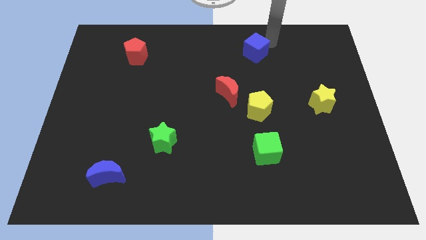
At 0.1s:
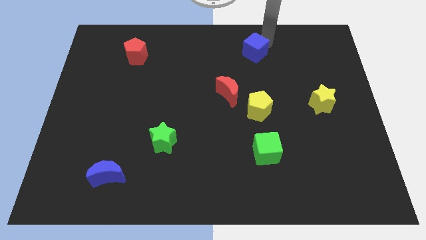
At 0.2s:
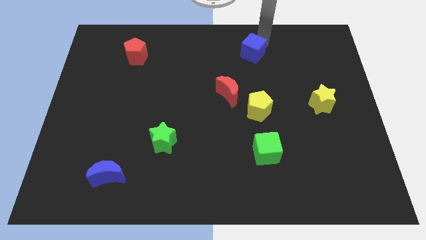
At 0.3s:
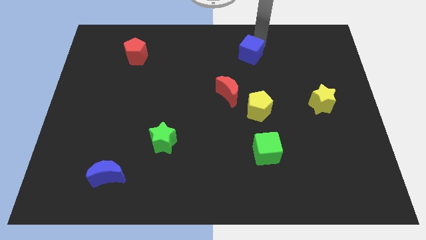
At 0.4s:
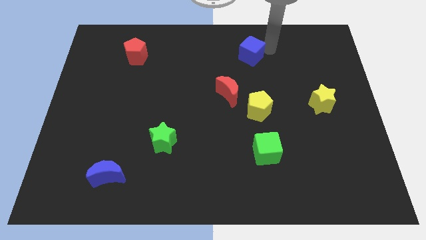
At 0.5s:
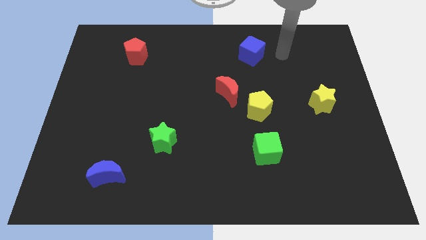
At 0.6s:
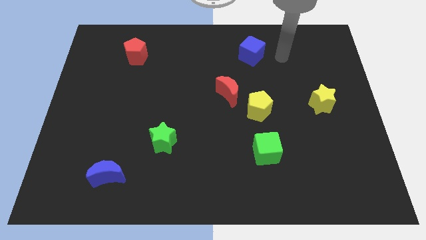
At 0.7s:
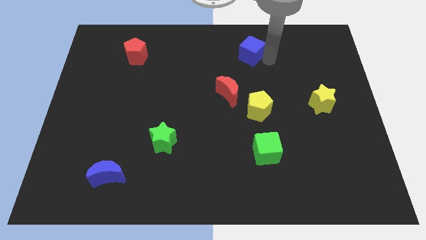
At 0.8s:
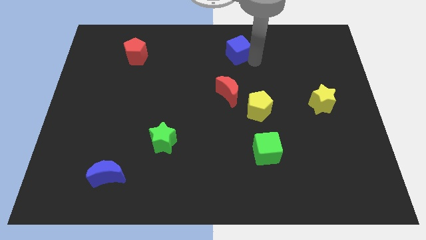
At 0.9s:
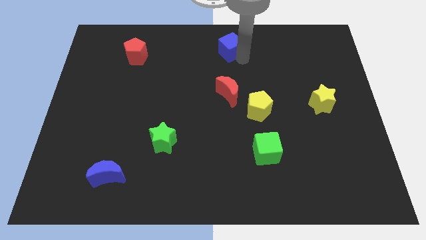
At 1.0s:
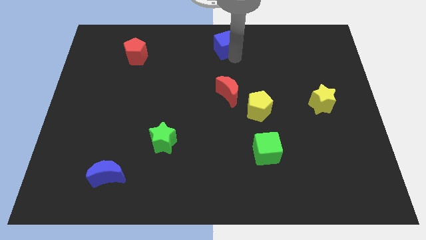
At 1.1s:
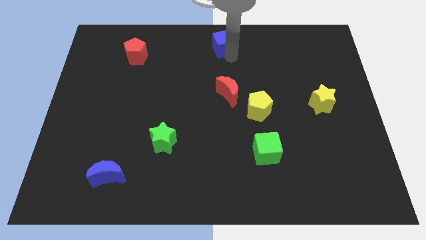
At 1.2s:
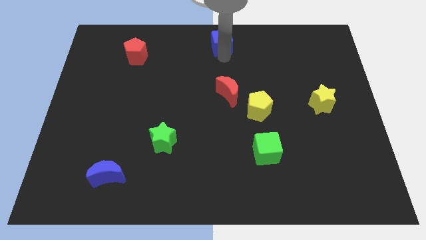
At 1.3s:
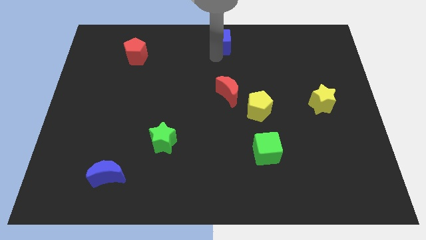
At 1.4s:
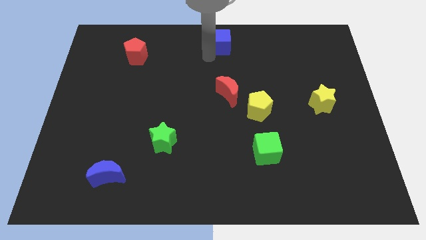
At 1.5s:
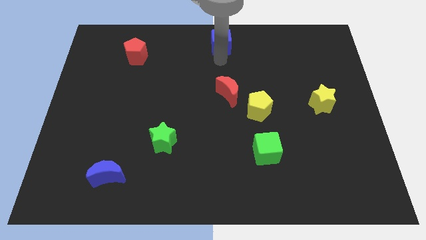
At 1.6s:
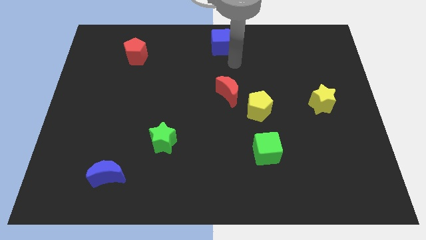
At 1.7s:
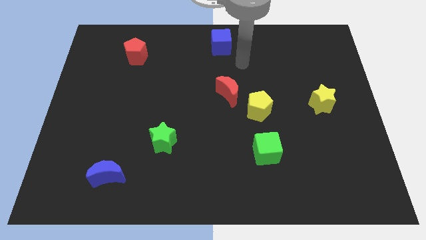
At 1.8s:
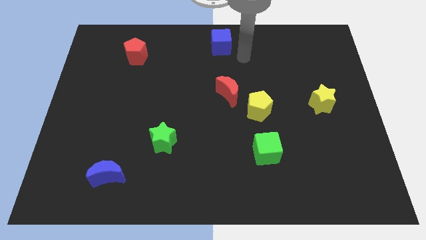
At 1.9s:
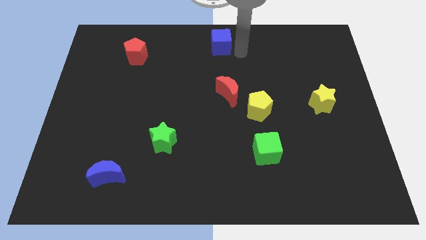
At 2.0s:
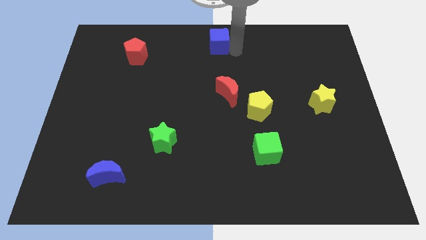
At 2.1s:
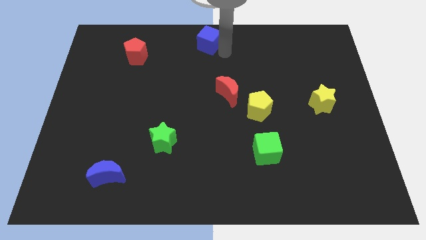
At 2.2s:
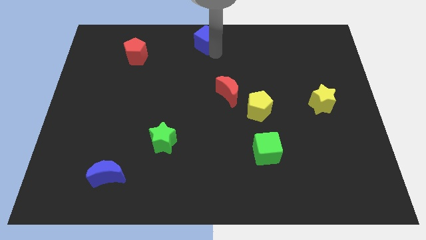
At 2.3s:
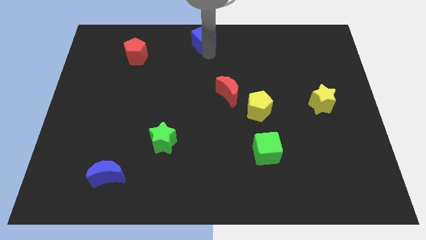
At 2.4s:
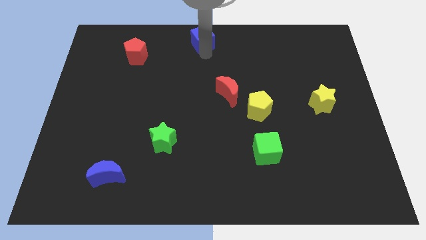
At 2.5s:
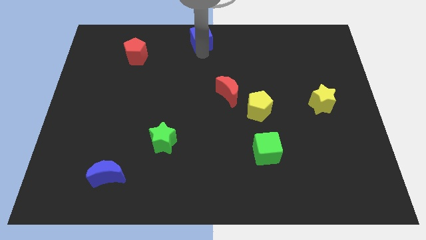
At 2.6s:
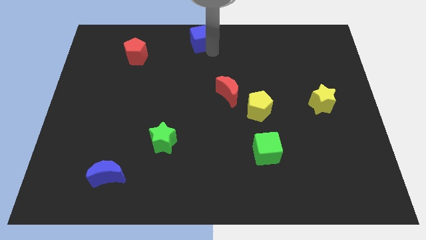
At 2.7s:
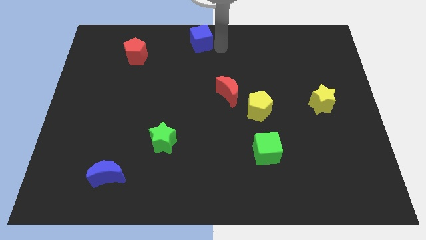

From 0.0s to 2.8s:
move the blue cube to the top center of the board

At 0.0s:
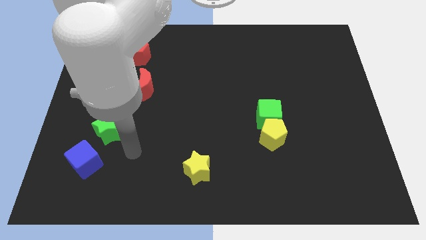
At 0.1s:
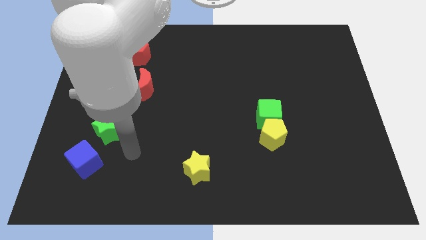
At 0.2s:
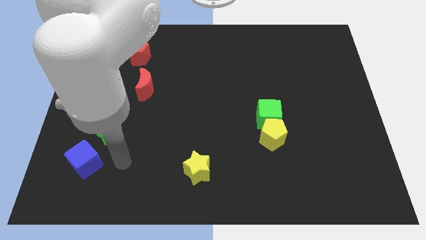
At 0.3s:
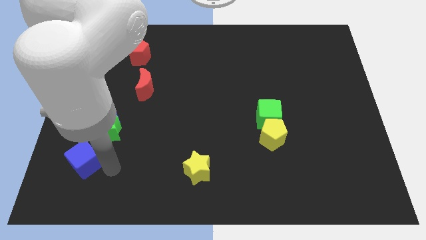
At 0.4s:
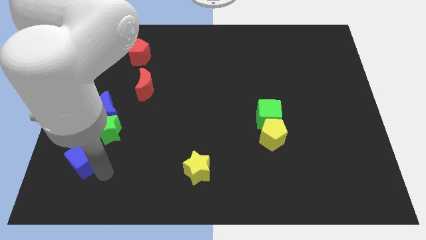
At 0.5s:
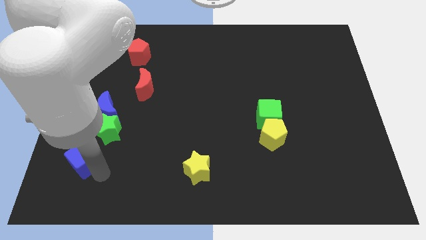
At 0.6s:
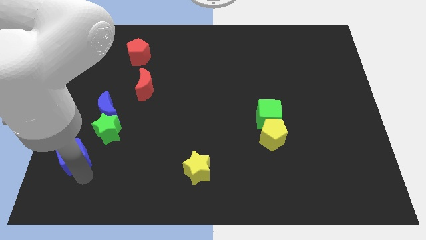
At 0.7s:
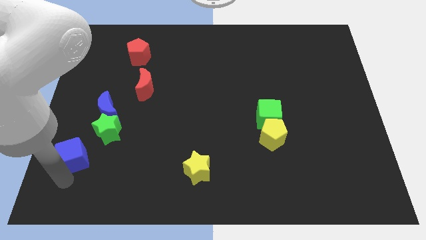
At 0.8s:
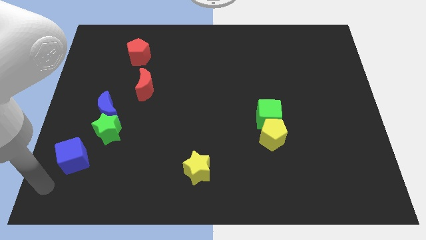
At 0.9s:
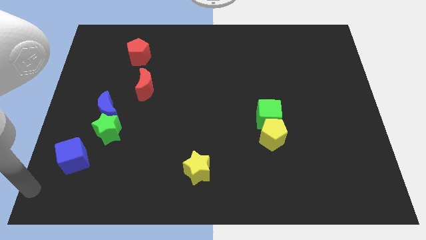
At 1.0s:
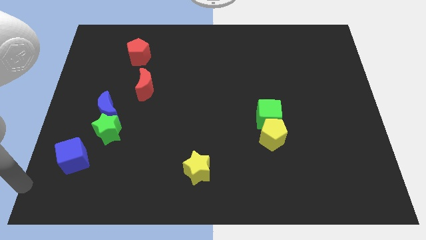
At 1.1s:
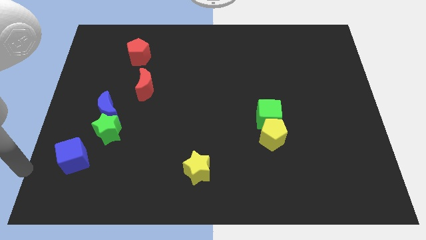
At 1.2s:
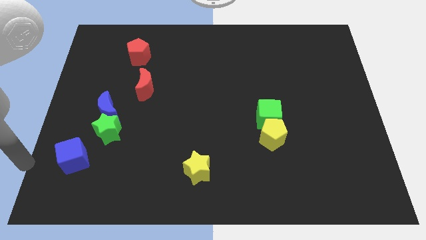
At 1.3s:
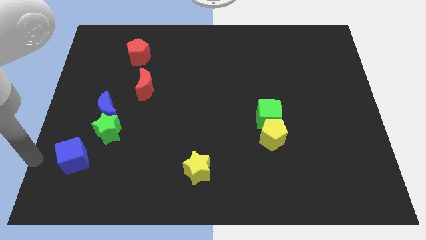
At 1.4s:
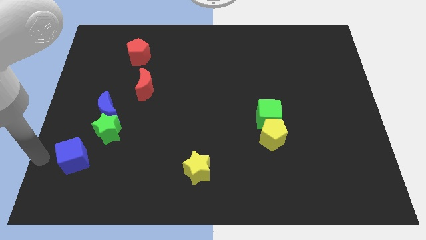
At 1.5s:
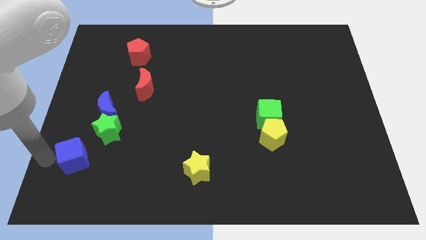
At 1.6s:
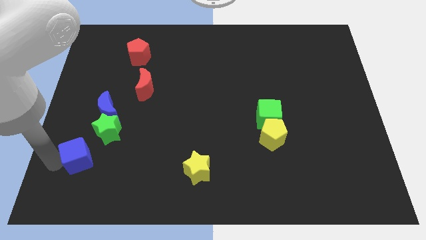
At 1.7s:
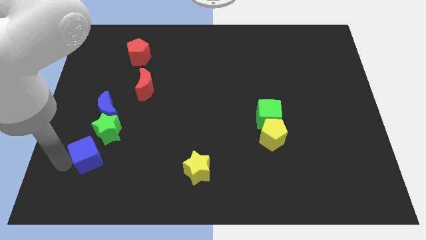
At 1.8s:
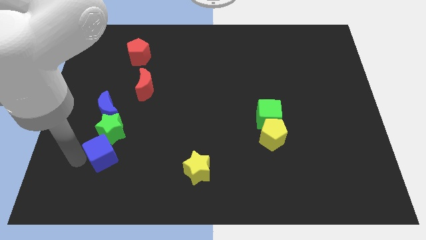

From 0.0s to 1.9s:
push blue cube below green star

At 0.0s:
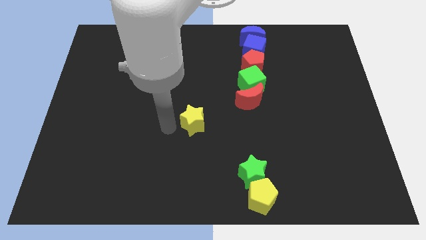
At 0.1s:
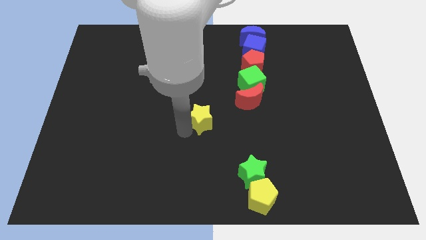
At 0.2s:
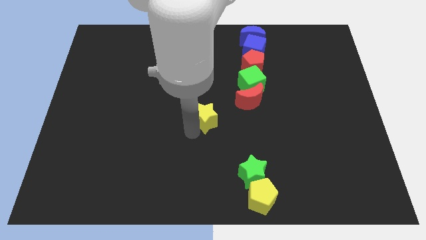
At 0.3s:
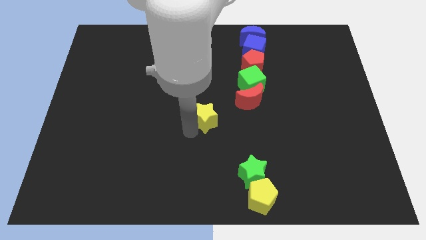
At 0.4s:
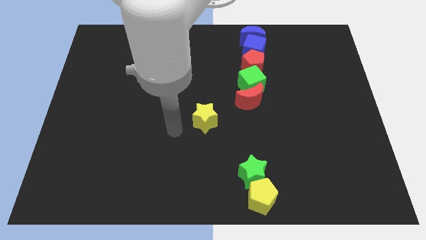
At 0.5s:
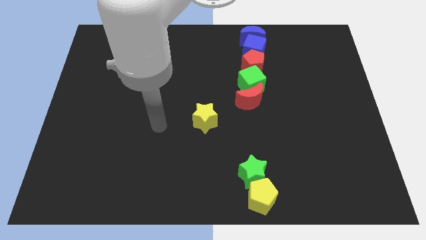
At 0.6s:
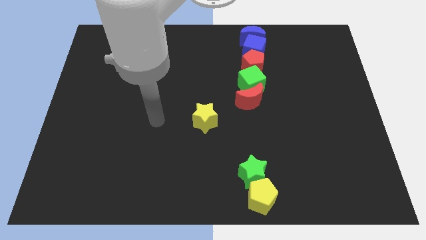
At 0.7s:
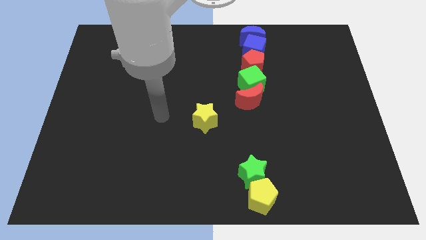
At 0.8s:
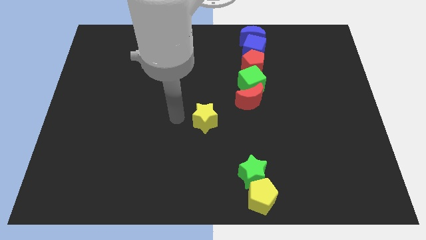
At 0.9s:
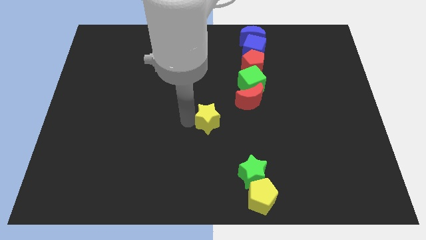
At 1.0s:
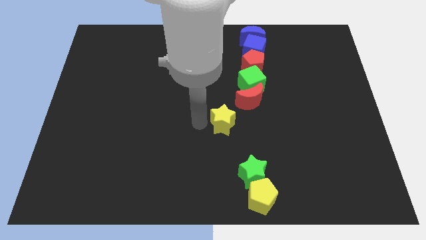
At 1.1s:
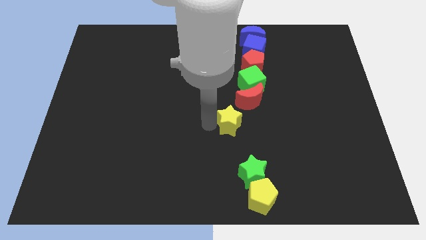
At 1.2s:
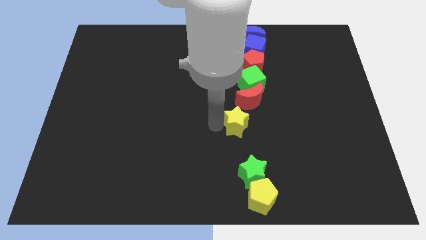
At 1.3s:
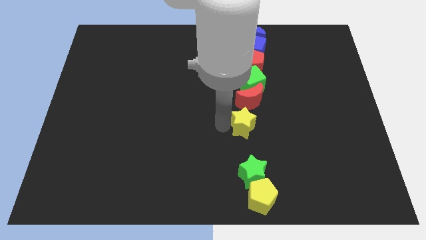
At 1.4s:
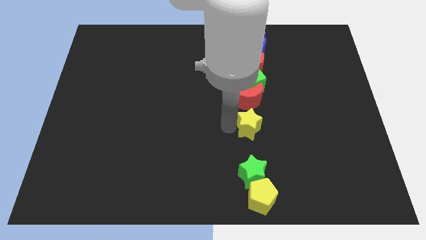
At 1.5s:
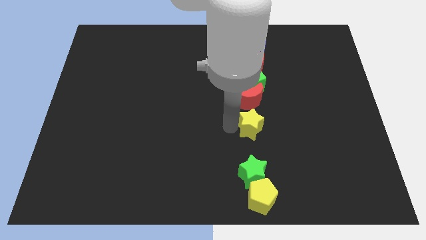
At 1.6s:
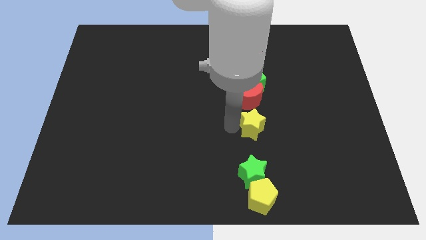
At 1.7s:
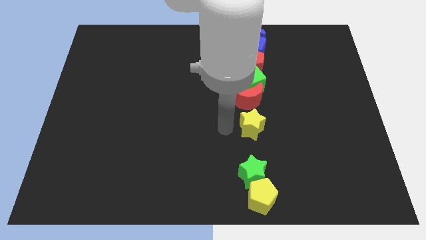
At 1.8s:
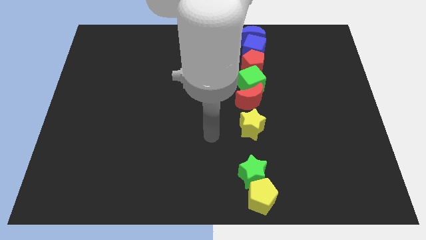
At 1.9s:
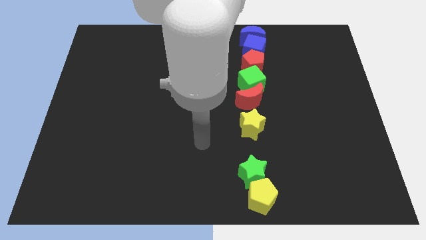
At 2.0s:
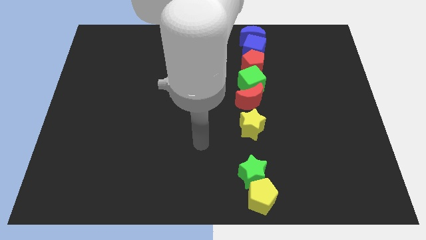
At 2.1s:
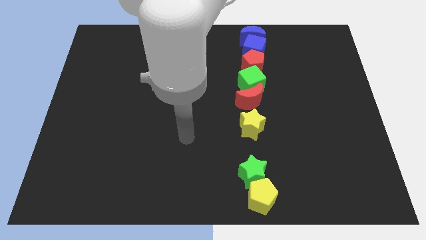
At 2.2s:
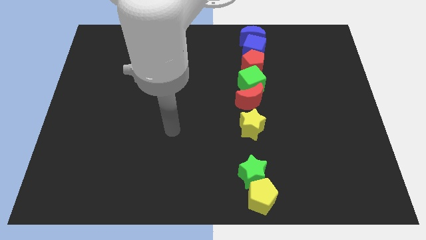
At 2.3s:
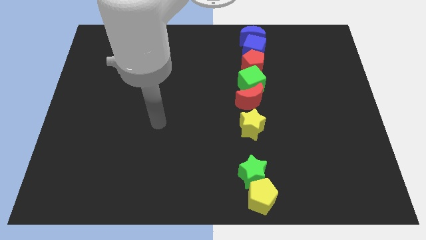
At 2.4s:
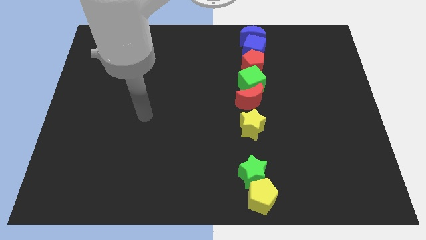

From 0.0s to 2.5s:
put the yellow star below the red crescent

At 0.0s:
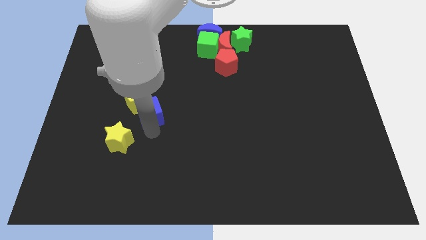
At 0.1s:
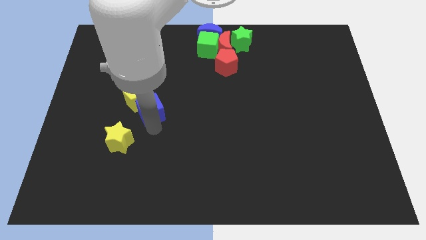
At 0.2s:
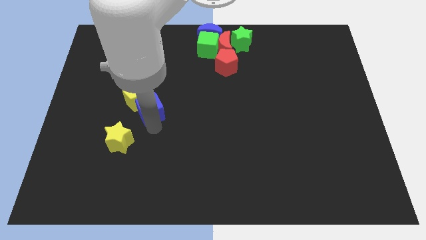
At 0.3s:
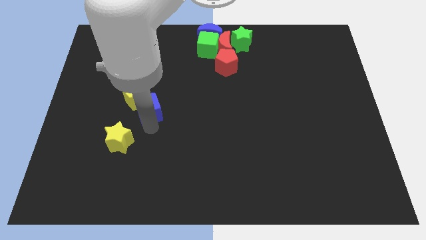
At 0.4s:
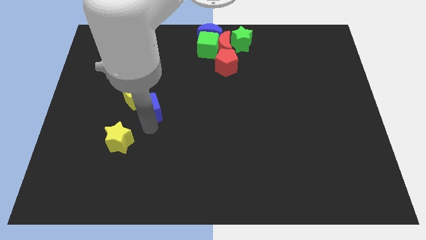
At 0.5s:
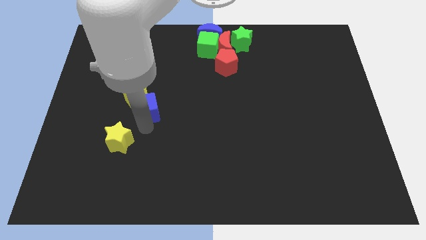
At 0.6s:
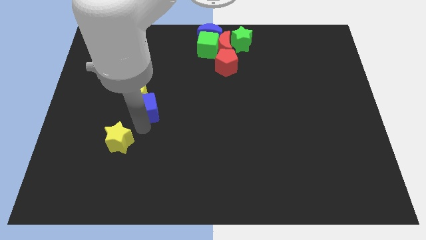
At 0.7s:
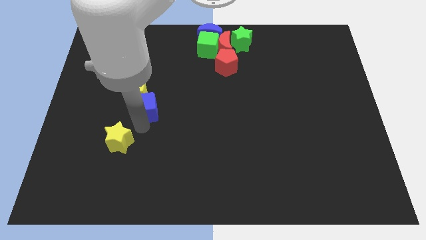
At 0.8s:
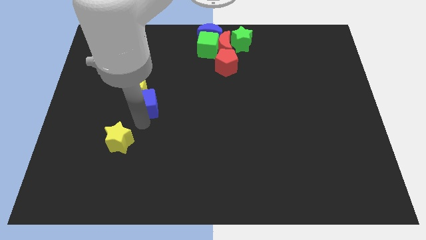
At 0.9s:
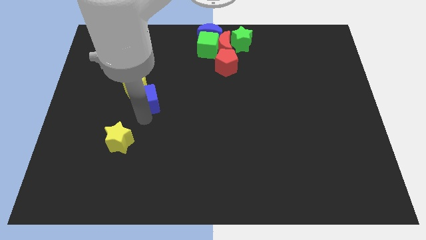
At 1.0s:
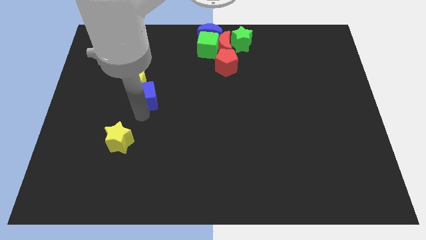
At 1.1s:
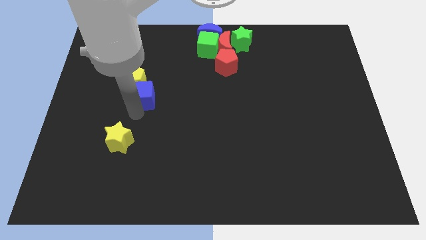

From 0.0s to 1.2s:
move the blue cube right below the yellow pentagon

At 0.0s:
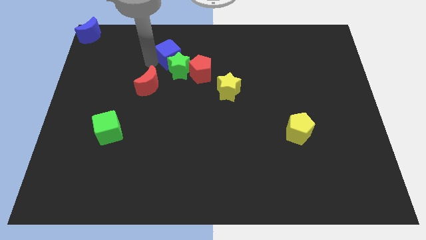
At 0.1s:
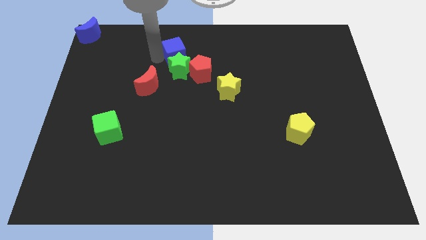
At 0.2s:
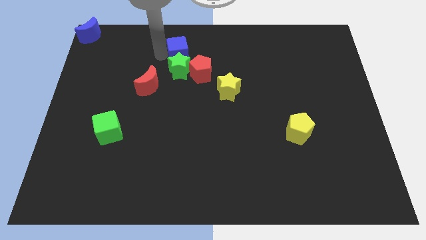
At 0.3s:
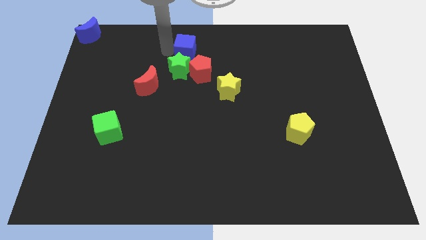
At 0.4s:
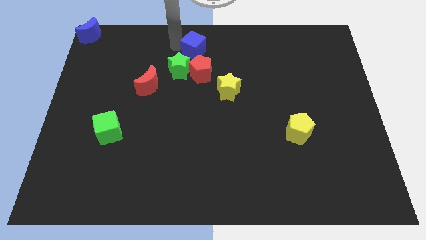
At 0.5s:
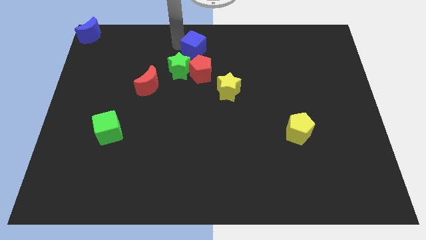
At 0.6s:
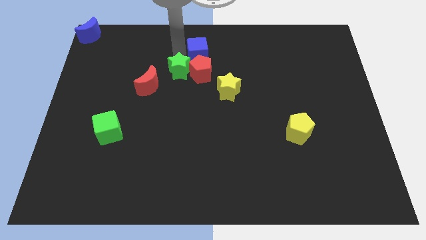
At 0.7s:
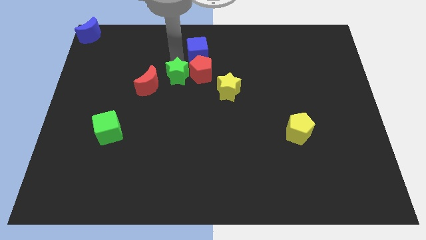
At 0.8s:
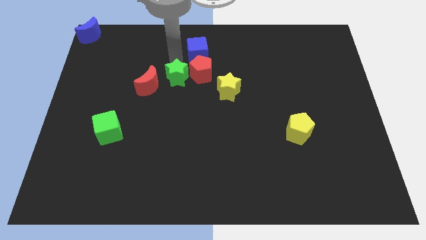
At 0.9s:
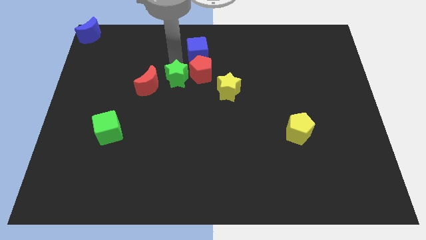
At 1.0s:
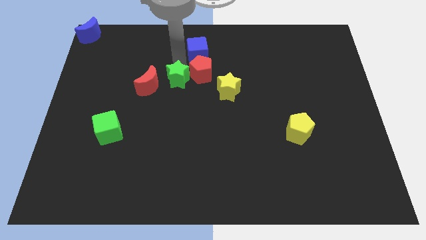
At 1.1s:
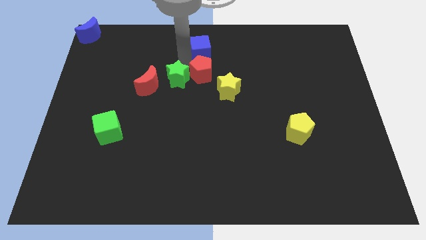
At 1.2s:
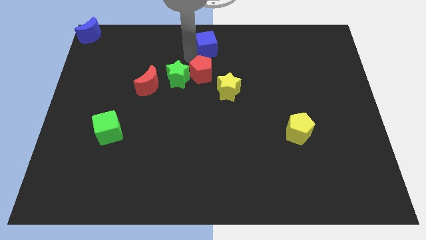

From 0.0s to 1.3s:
place the blue cube above the red pentagon
